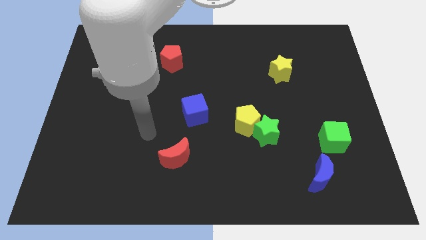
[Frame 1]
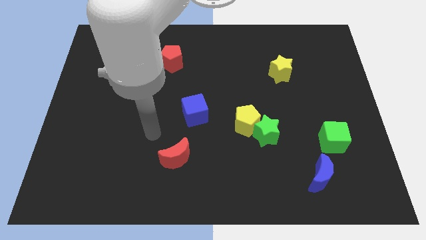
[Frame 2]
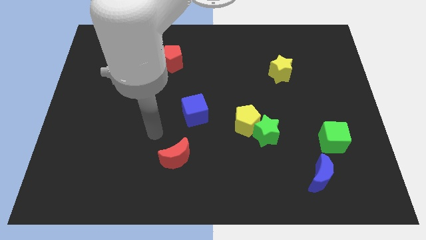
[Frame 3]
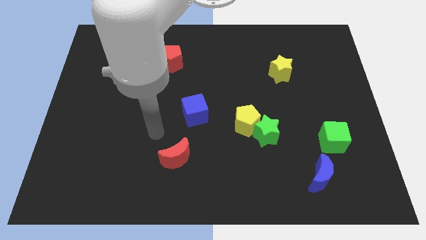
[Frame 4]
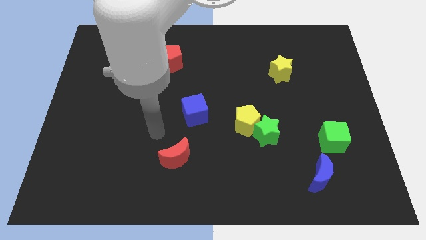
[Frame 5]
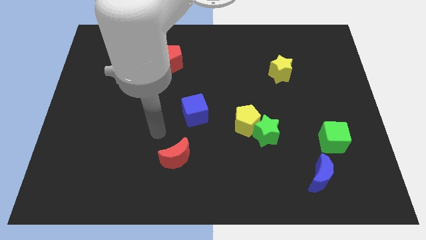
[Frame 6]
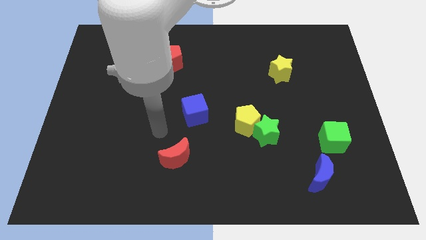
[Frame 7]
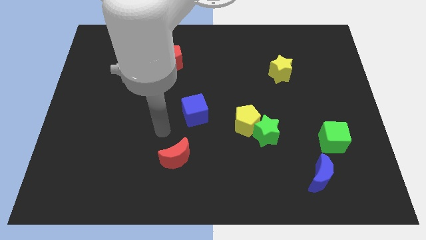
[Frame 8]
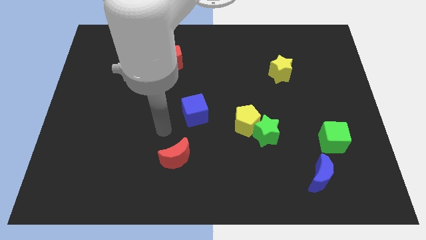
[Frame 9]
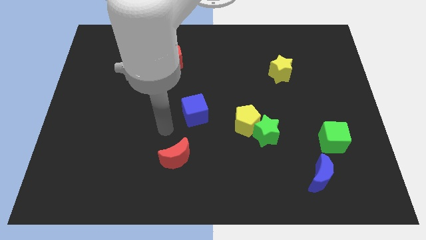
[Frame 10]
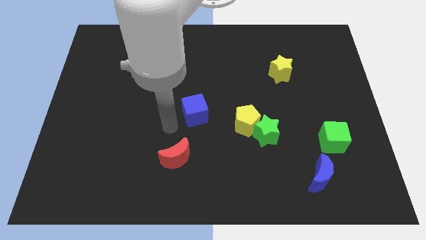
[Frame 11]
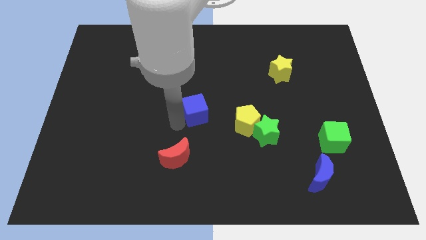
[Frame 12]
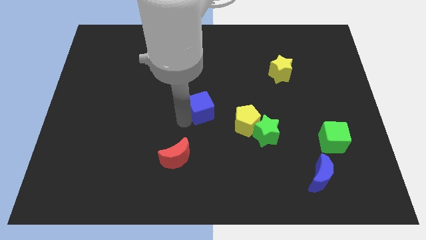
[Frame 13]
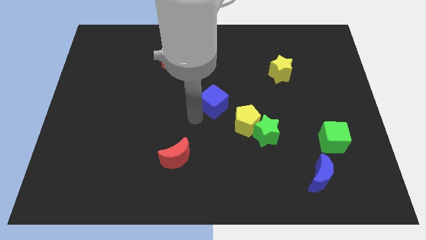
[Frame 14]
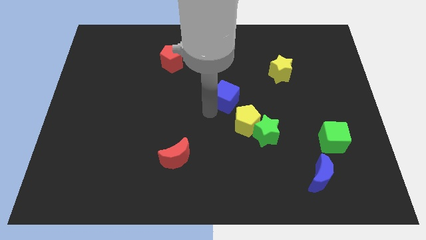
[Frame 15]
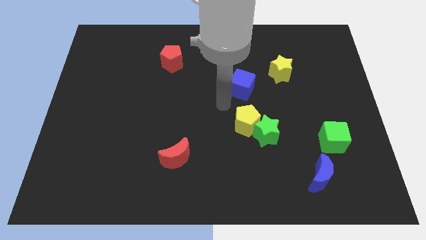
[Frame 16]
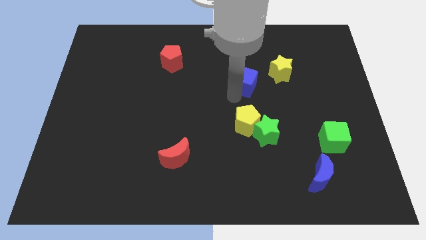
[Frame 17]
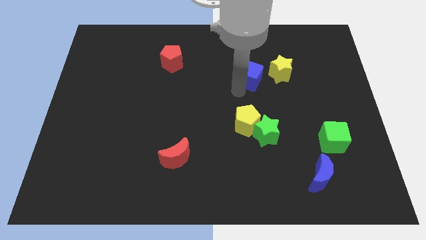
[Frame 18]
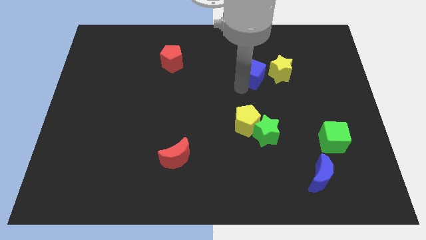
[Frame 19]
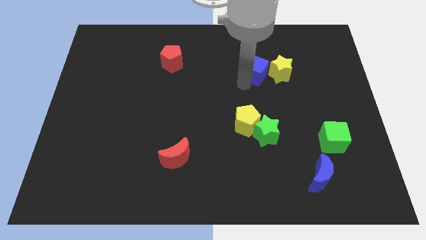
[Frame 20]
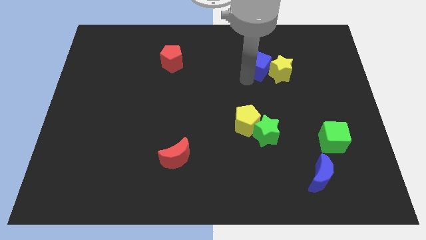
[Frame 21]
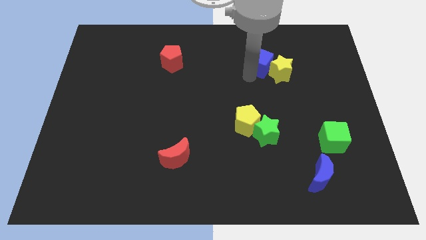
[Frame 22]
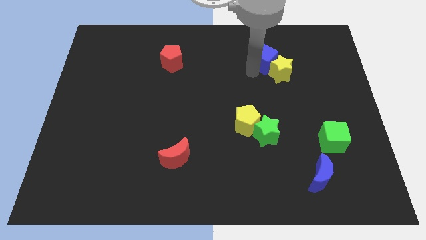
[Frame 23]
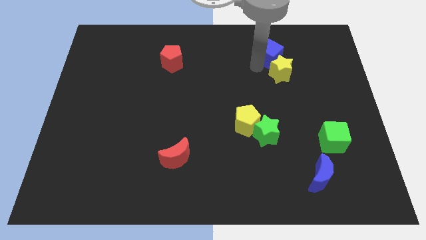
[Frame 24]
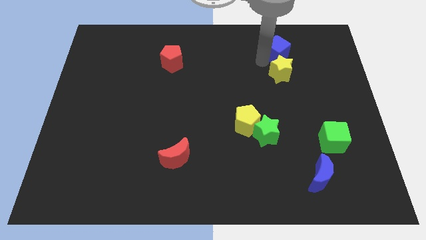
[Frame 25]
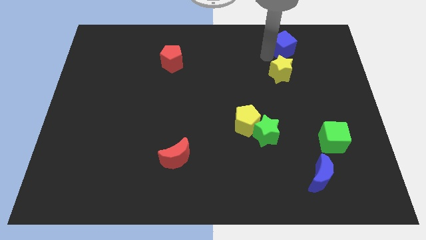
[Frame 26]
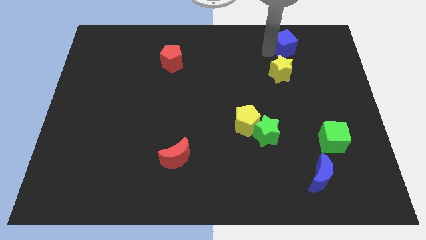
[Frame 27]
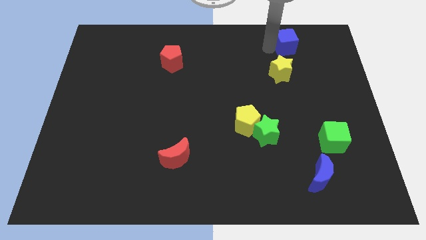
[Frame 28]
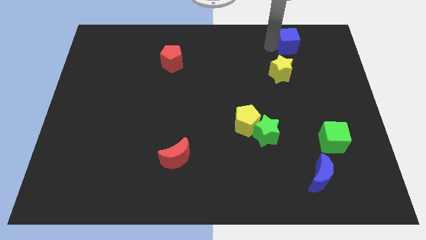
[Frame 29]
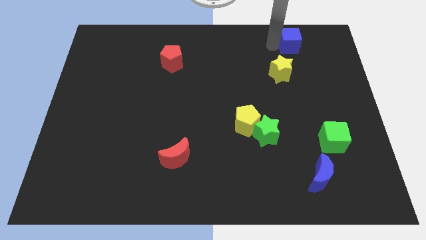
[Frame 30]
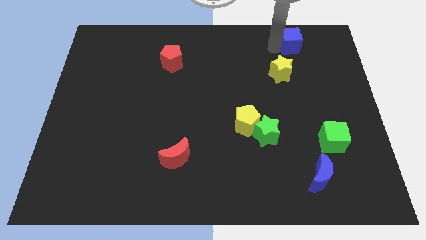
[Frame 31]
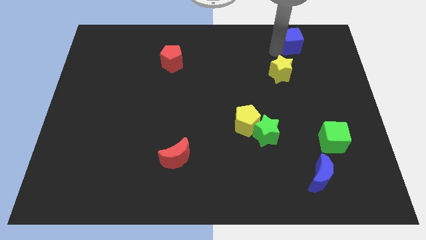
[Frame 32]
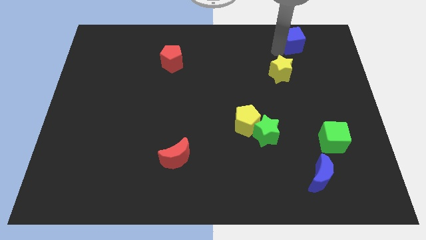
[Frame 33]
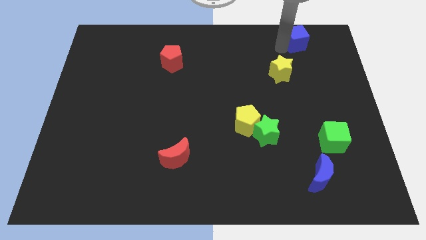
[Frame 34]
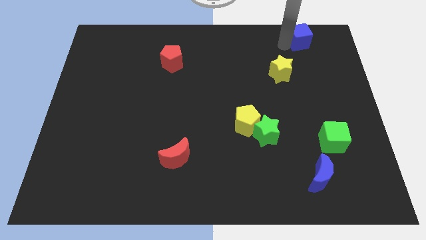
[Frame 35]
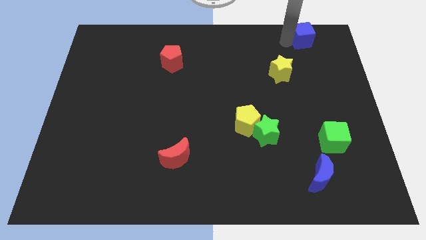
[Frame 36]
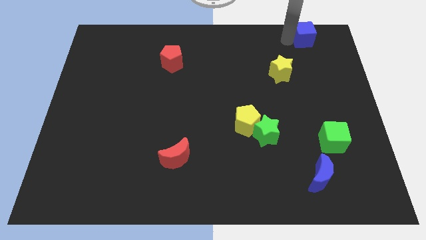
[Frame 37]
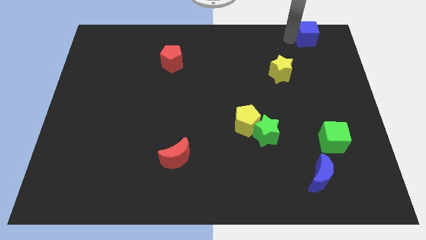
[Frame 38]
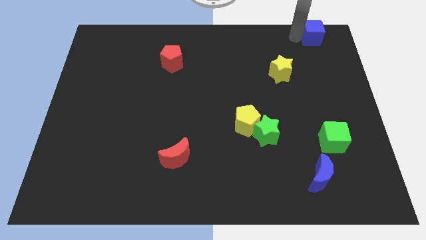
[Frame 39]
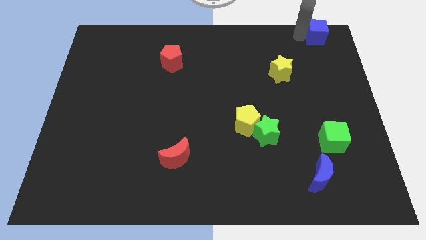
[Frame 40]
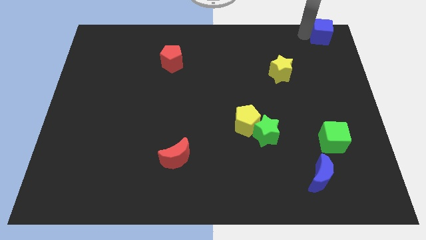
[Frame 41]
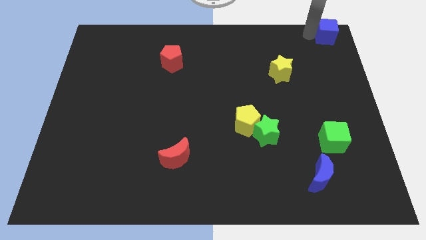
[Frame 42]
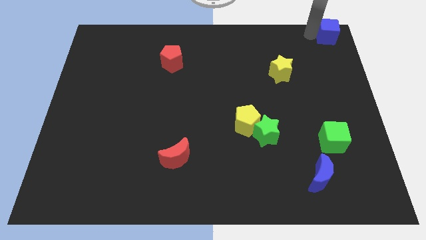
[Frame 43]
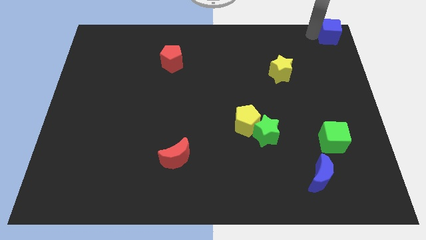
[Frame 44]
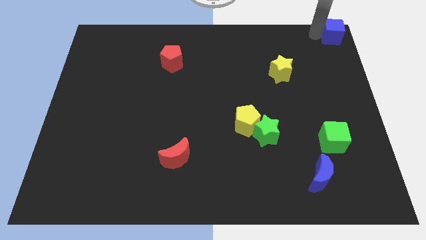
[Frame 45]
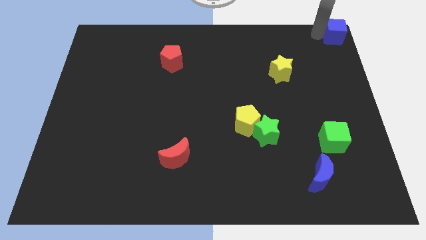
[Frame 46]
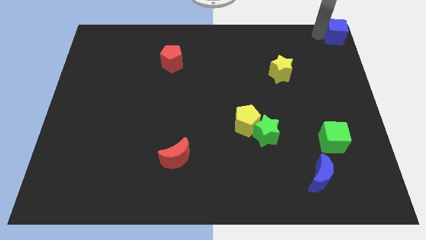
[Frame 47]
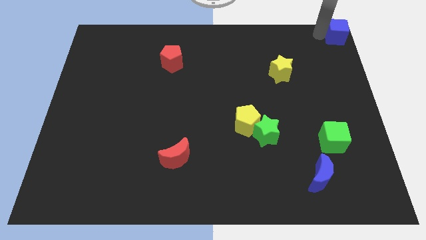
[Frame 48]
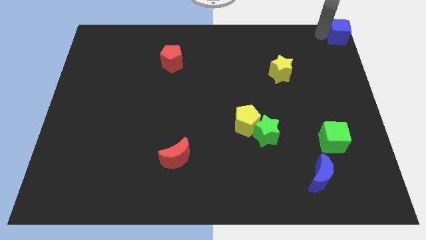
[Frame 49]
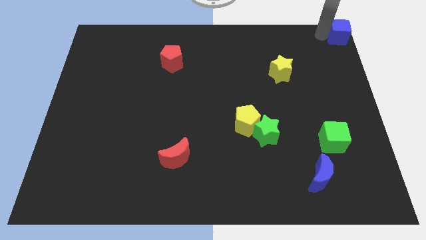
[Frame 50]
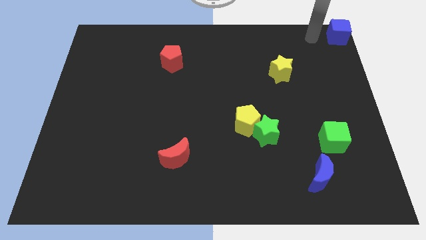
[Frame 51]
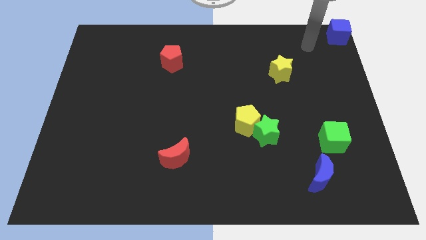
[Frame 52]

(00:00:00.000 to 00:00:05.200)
push the blue cube to the top right corner

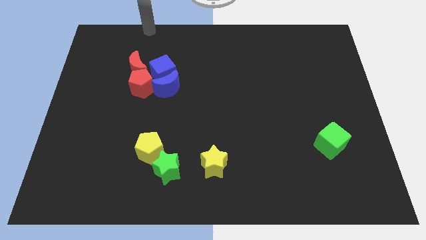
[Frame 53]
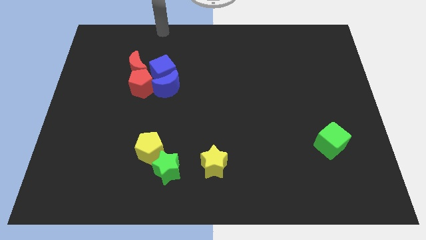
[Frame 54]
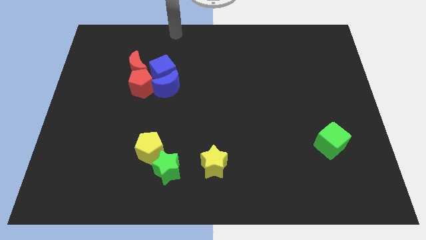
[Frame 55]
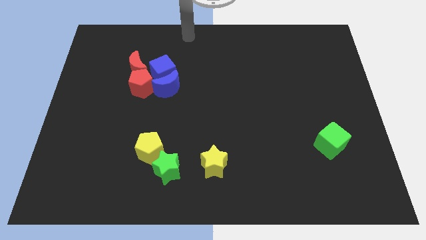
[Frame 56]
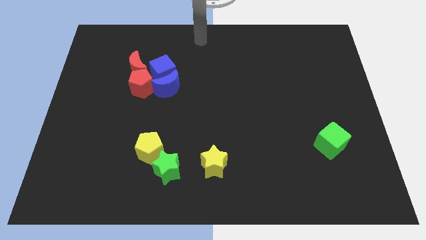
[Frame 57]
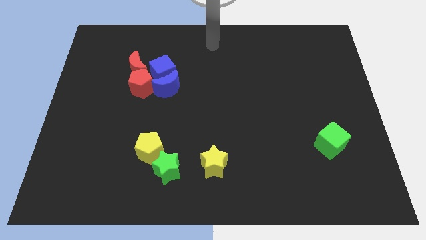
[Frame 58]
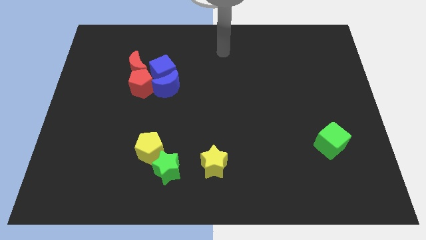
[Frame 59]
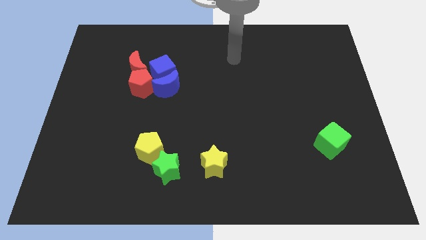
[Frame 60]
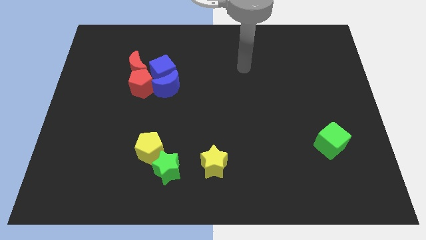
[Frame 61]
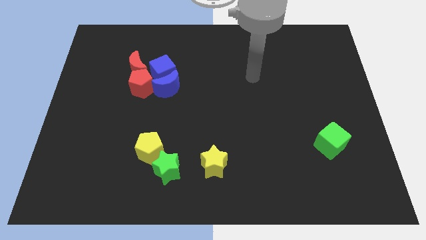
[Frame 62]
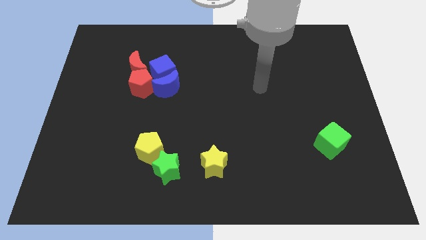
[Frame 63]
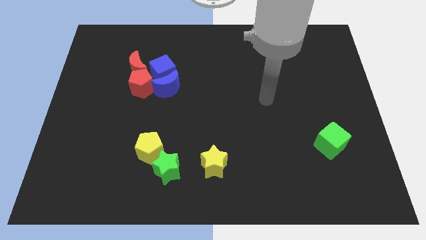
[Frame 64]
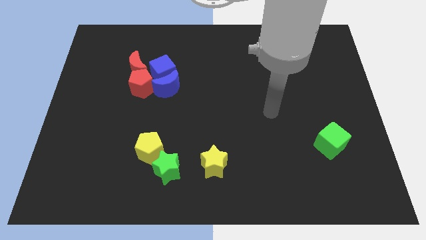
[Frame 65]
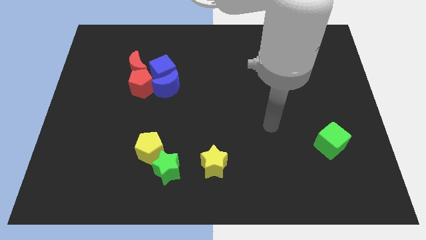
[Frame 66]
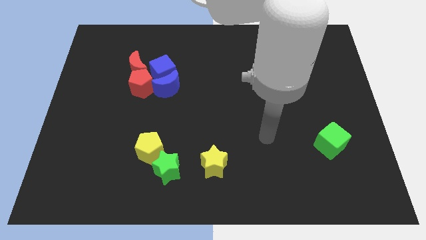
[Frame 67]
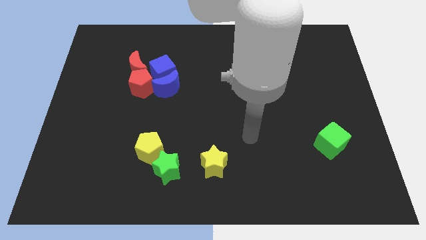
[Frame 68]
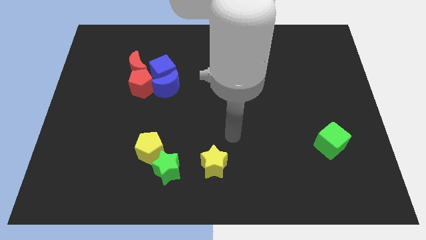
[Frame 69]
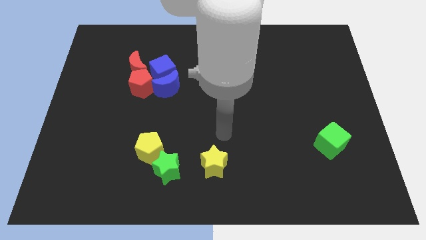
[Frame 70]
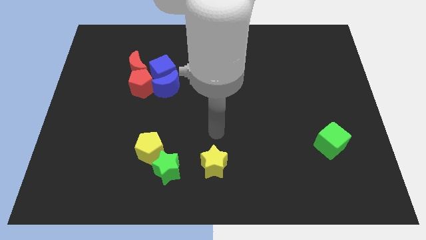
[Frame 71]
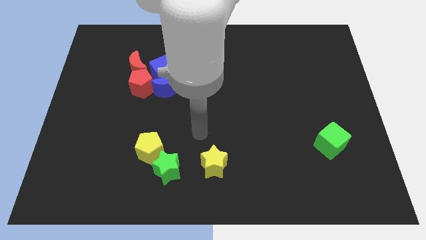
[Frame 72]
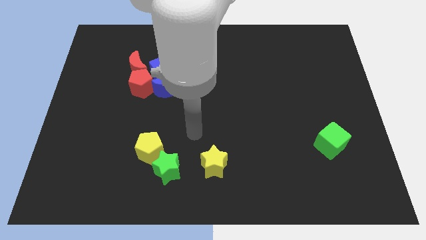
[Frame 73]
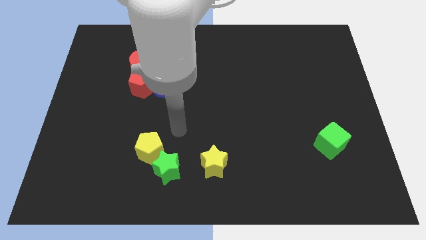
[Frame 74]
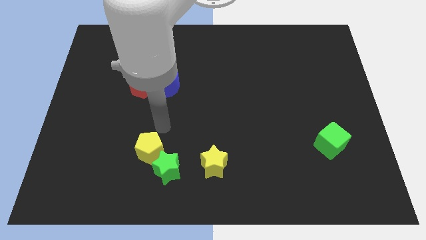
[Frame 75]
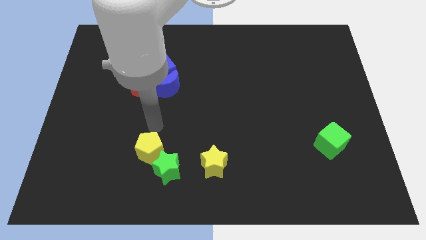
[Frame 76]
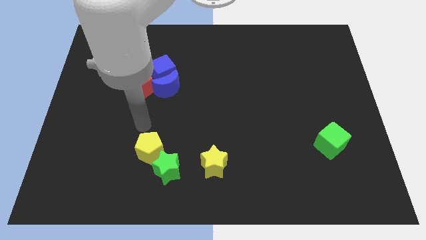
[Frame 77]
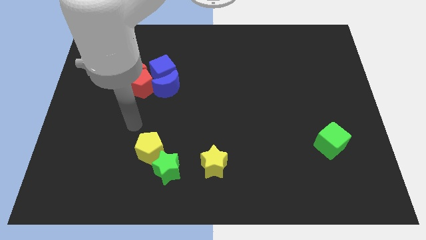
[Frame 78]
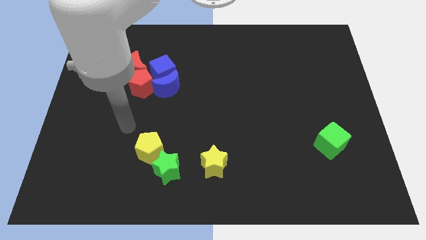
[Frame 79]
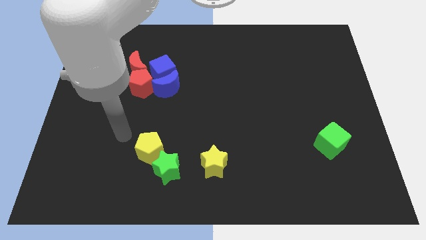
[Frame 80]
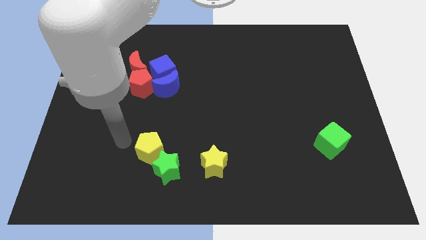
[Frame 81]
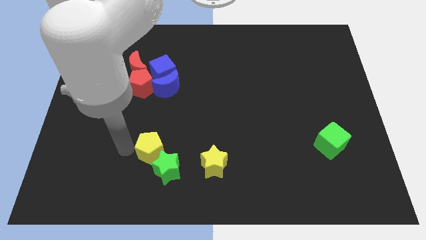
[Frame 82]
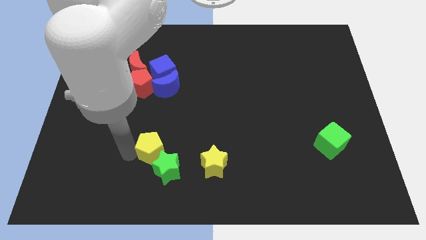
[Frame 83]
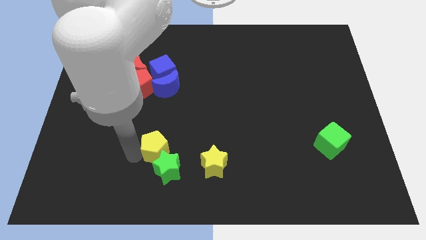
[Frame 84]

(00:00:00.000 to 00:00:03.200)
touch the left side of the yellow pentagon

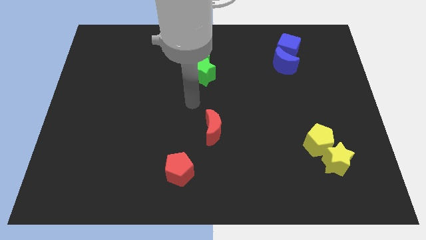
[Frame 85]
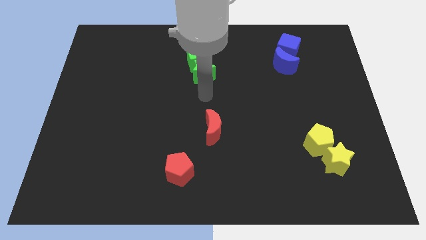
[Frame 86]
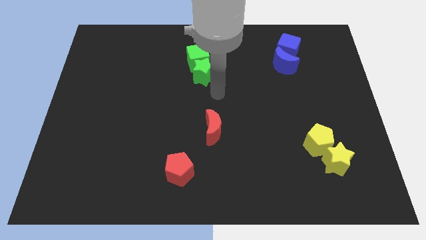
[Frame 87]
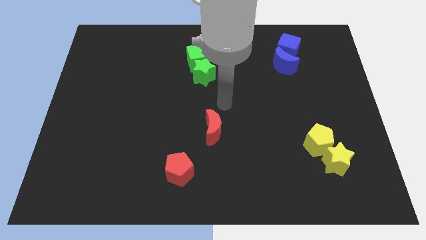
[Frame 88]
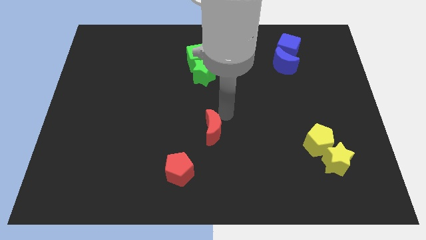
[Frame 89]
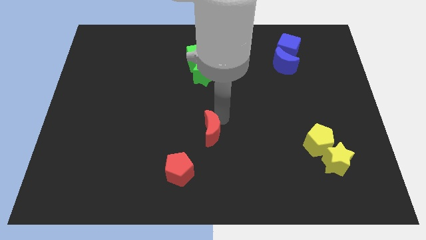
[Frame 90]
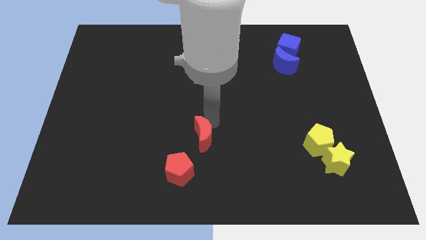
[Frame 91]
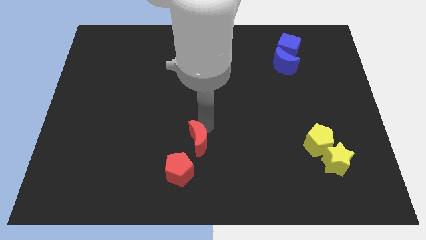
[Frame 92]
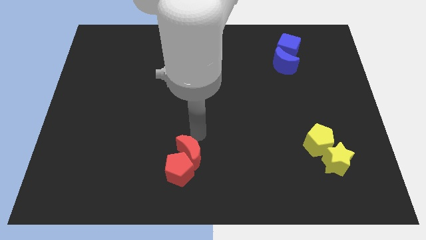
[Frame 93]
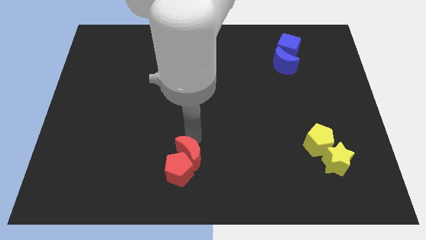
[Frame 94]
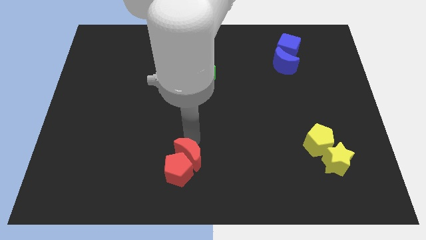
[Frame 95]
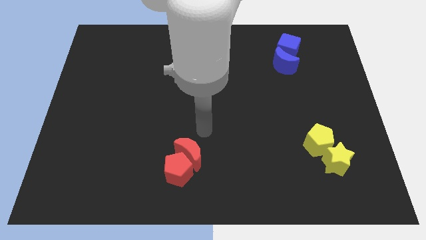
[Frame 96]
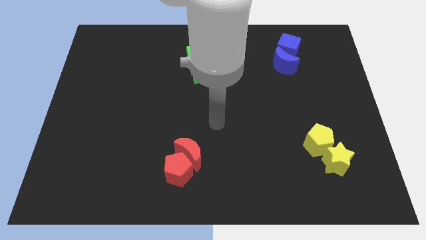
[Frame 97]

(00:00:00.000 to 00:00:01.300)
place the red moon above the red pentagon
